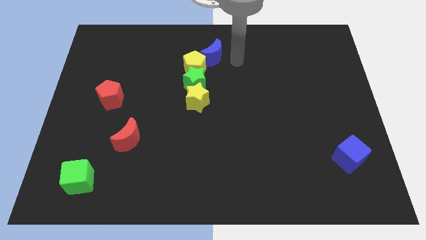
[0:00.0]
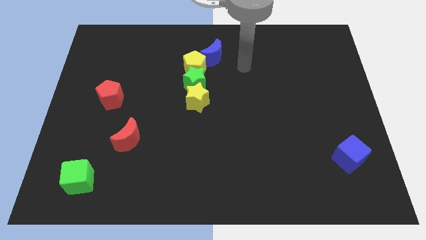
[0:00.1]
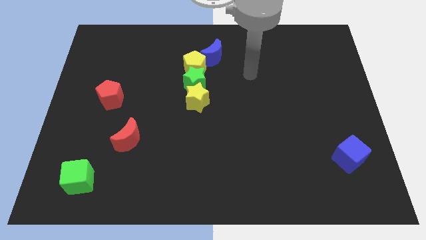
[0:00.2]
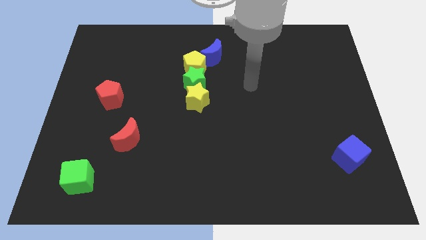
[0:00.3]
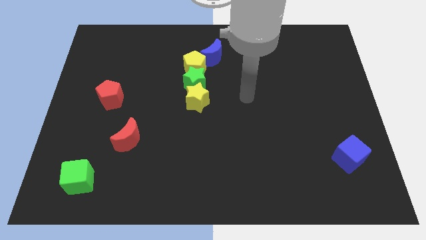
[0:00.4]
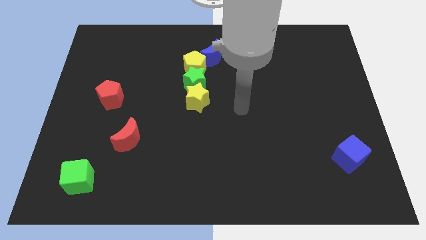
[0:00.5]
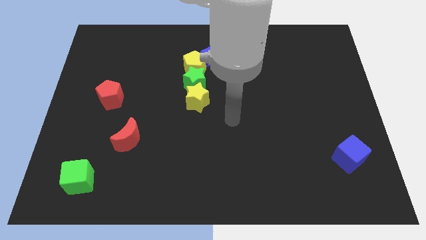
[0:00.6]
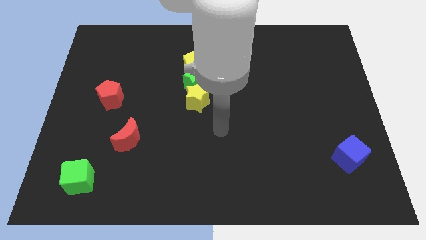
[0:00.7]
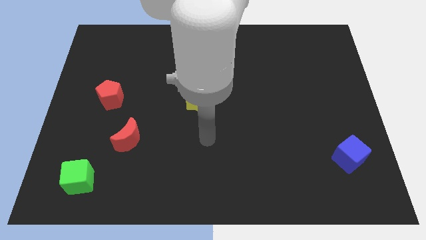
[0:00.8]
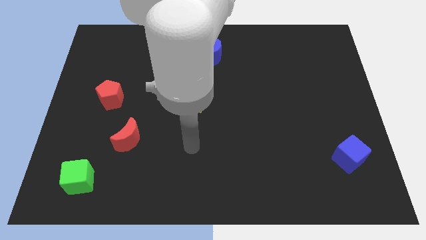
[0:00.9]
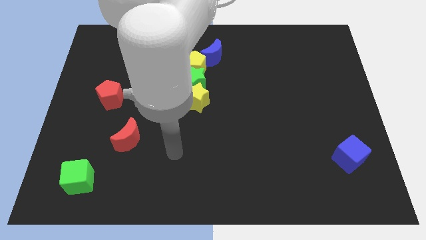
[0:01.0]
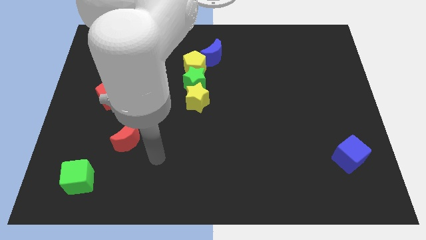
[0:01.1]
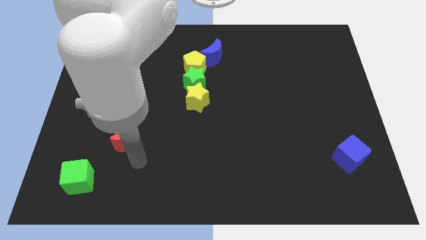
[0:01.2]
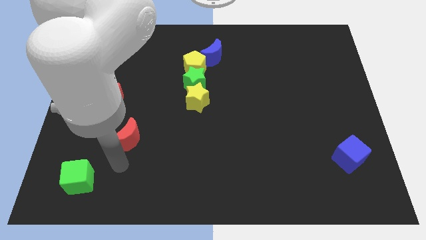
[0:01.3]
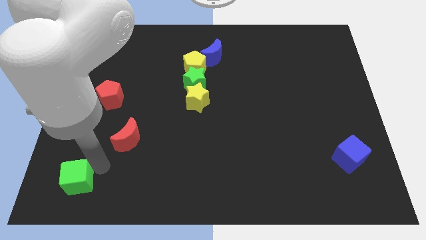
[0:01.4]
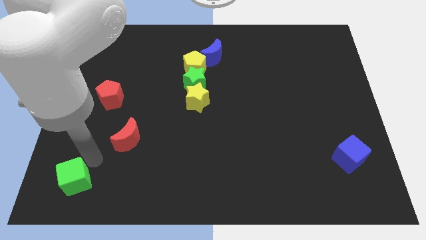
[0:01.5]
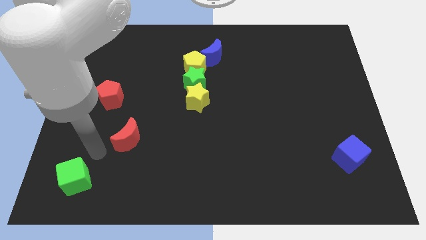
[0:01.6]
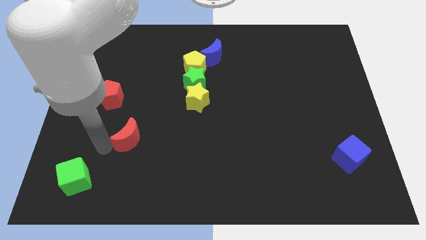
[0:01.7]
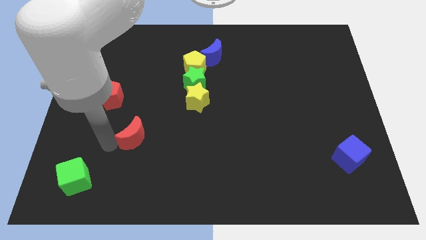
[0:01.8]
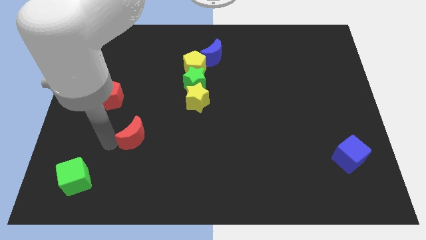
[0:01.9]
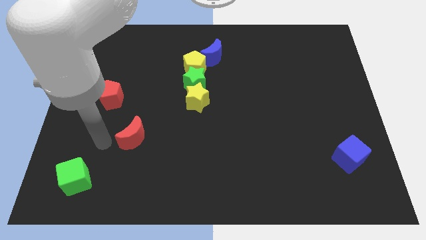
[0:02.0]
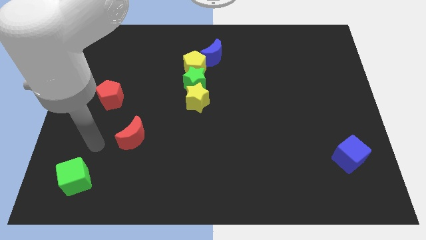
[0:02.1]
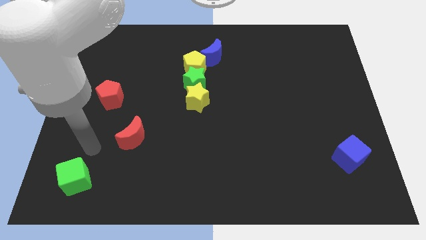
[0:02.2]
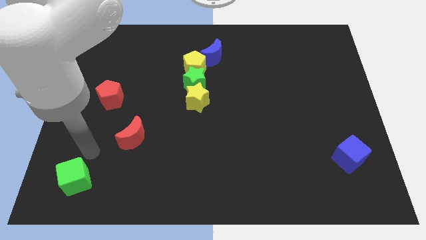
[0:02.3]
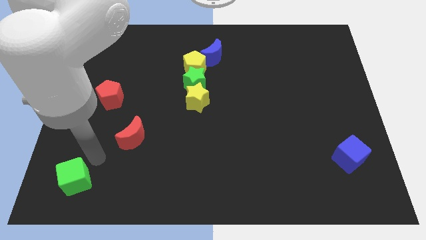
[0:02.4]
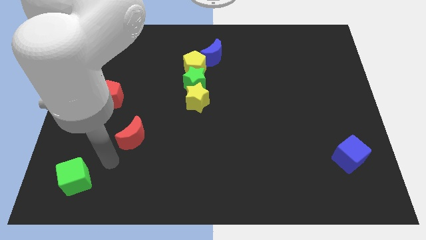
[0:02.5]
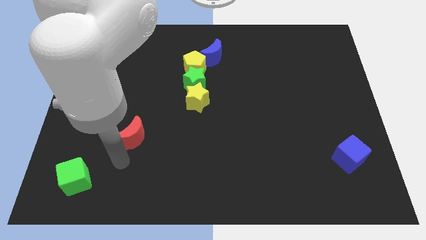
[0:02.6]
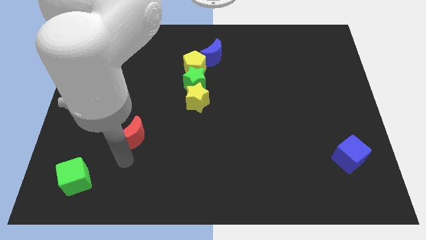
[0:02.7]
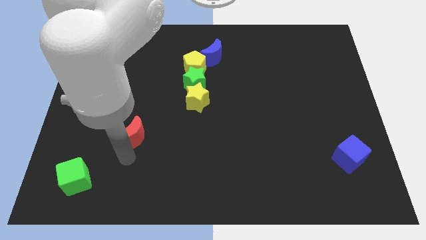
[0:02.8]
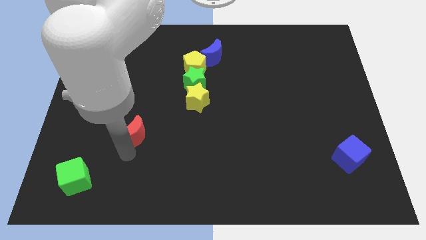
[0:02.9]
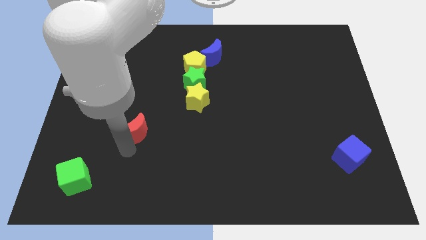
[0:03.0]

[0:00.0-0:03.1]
touch the bottom of red moon

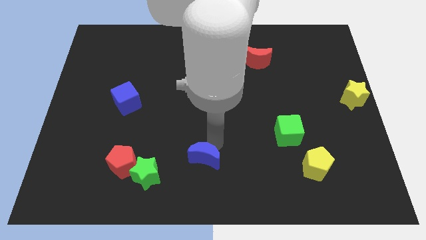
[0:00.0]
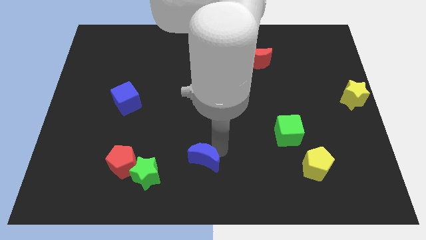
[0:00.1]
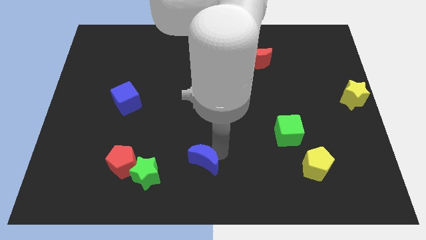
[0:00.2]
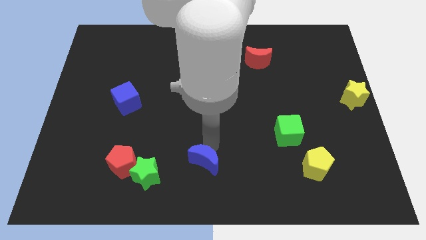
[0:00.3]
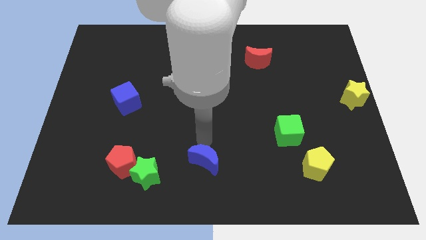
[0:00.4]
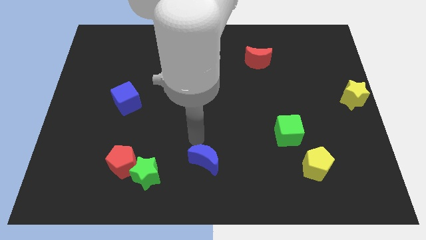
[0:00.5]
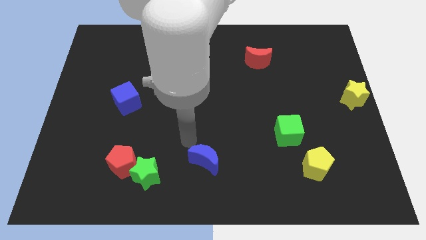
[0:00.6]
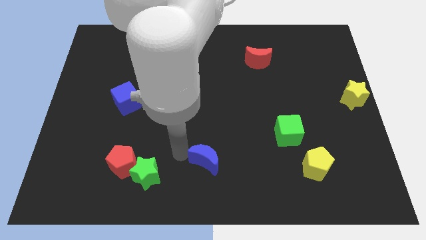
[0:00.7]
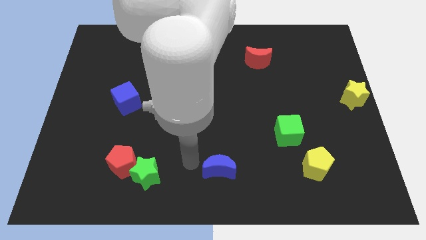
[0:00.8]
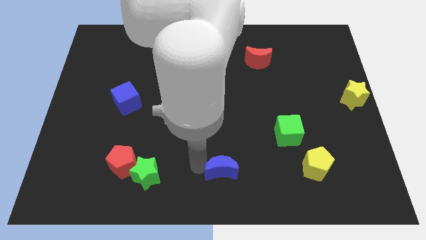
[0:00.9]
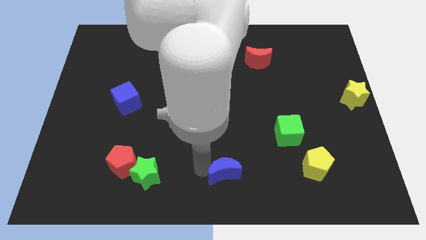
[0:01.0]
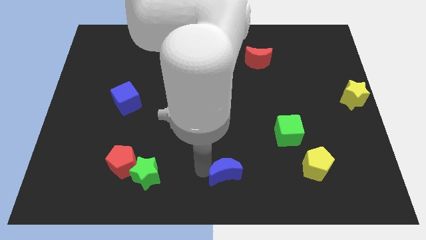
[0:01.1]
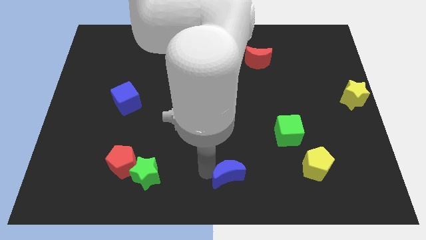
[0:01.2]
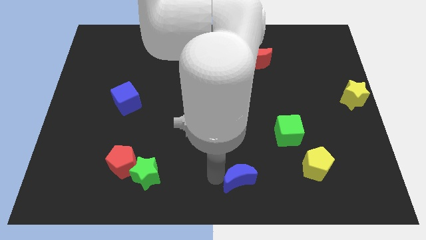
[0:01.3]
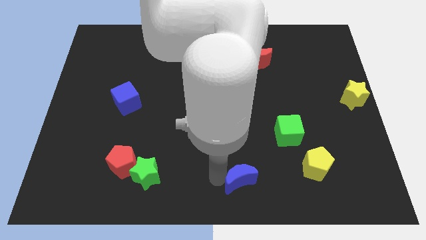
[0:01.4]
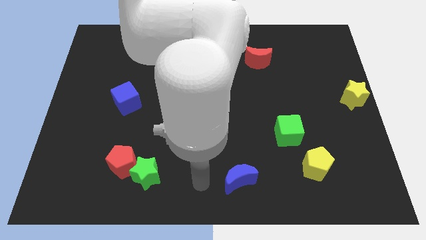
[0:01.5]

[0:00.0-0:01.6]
place the blue crescent at the bottom center of the board

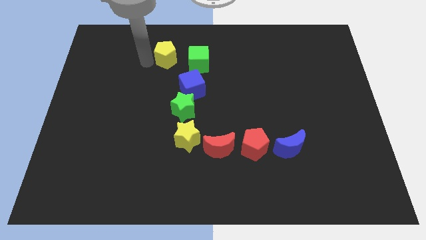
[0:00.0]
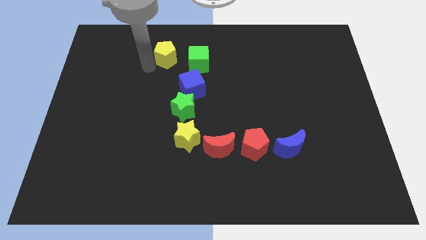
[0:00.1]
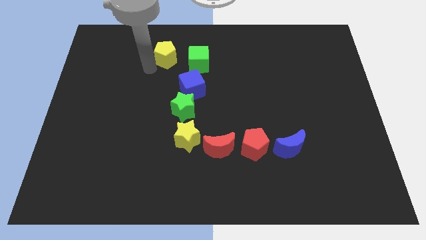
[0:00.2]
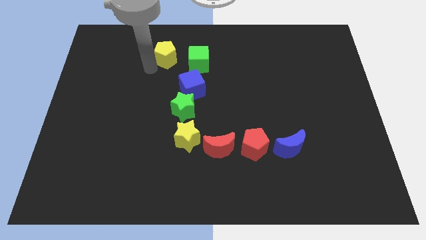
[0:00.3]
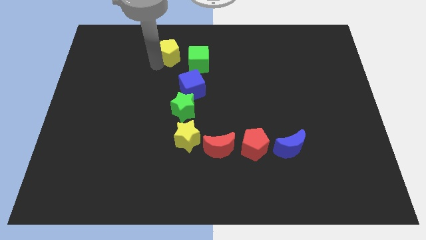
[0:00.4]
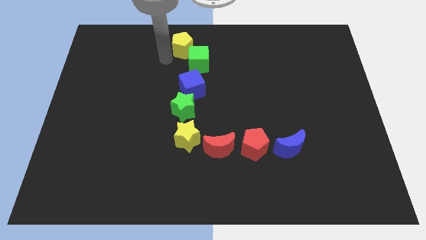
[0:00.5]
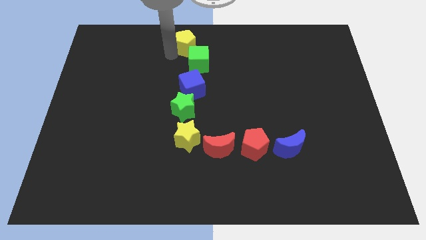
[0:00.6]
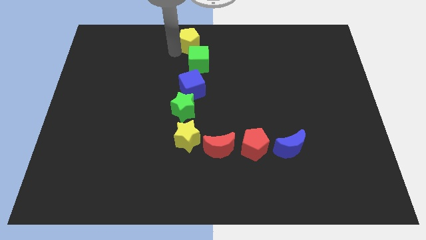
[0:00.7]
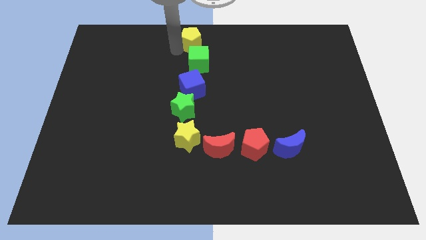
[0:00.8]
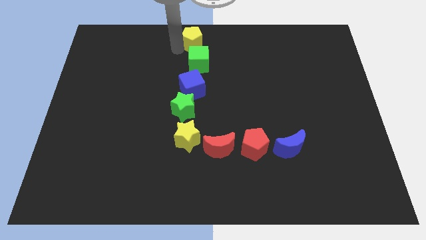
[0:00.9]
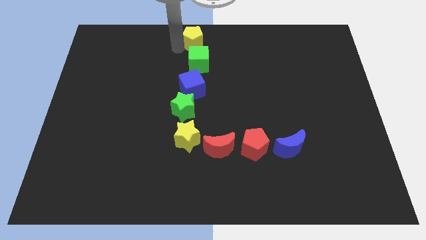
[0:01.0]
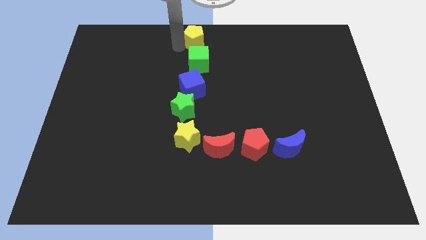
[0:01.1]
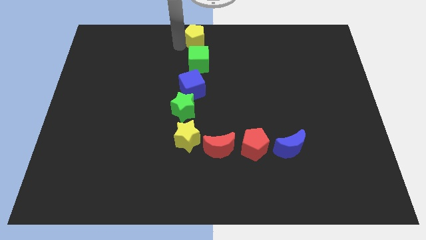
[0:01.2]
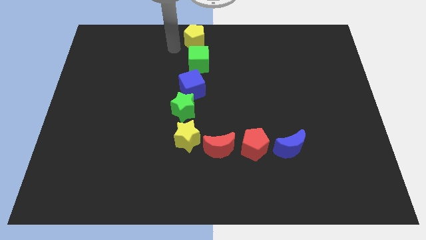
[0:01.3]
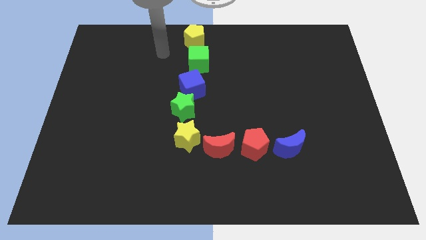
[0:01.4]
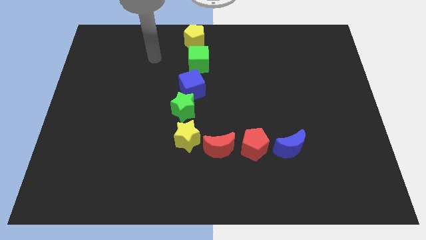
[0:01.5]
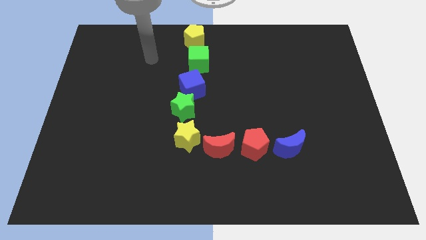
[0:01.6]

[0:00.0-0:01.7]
place the yellow pentagon above the green cube

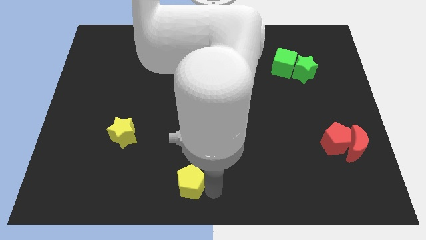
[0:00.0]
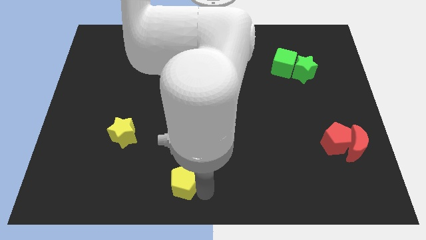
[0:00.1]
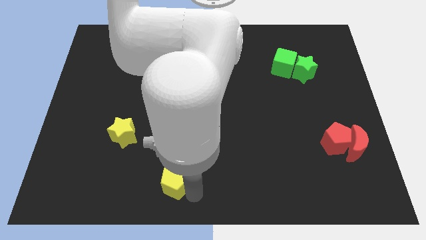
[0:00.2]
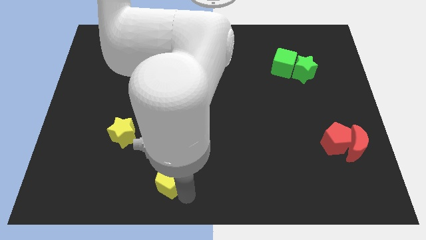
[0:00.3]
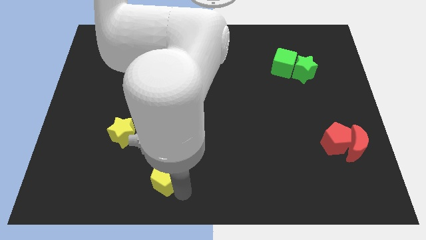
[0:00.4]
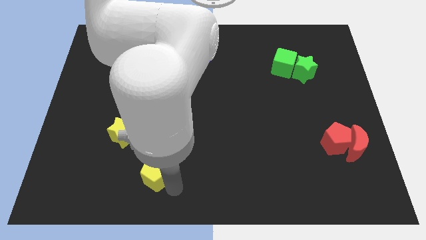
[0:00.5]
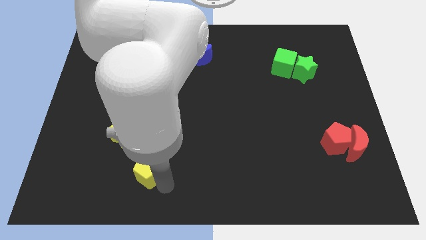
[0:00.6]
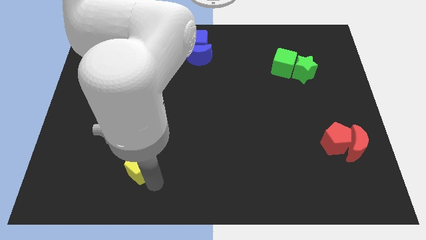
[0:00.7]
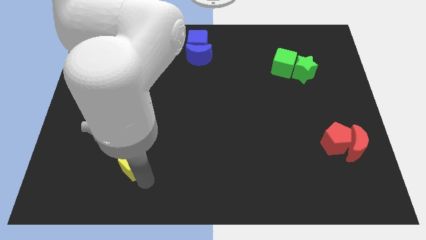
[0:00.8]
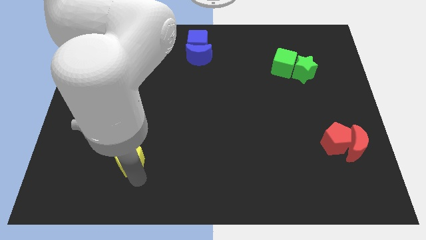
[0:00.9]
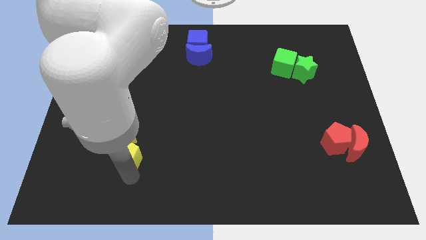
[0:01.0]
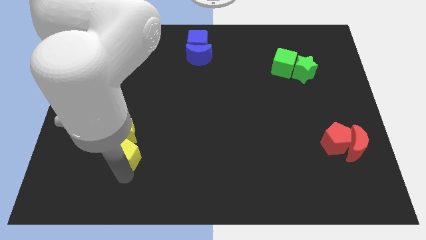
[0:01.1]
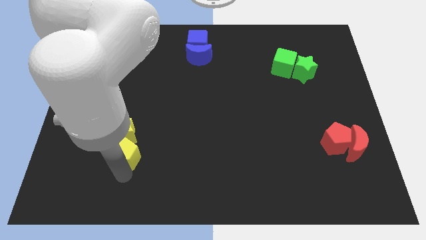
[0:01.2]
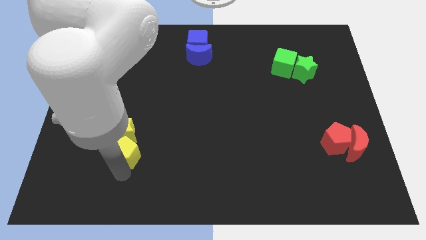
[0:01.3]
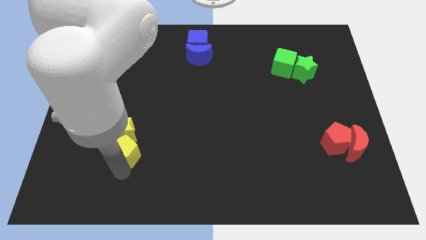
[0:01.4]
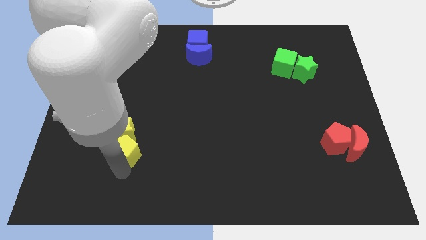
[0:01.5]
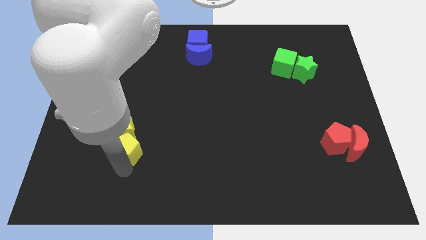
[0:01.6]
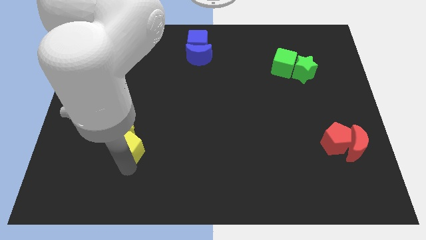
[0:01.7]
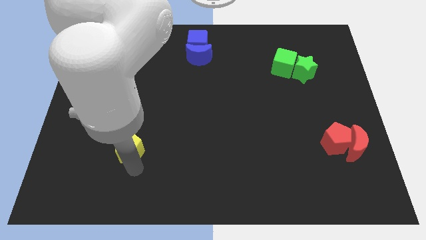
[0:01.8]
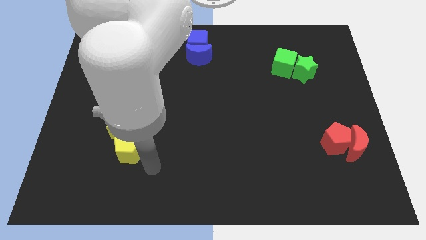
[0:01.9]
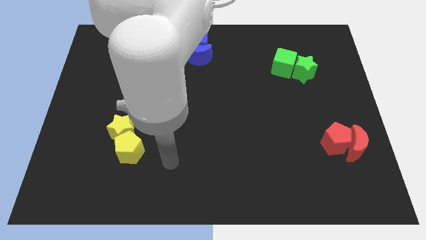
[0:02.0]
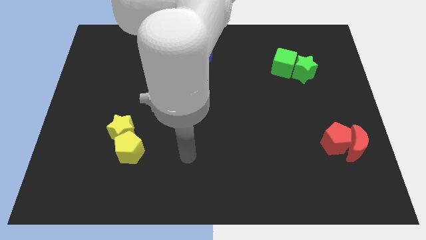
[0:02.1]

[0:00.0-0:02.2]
place the yellow pentagon into the yellow star

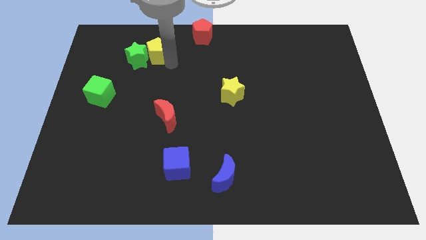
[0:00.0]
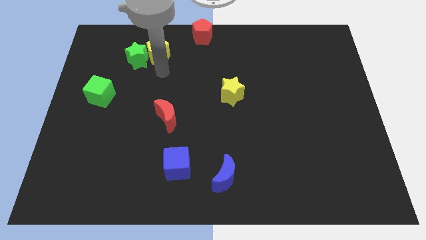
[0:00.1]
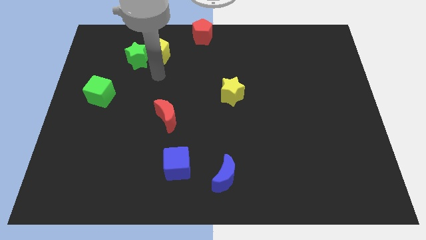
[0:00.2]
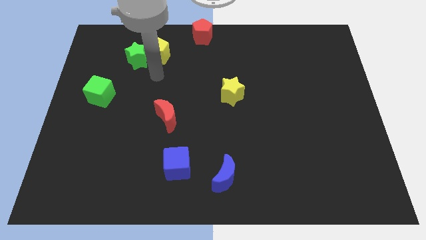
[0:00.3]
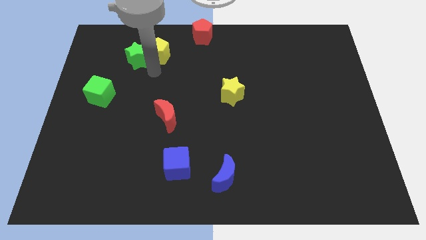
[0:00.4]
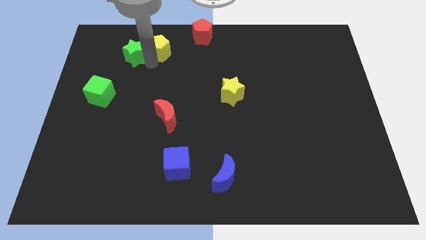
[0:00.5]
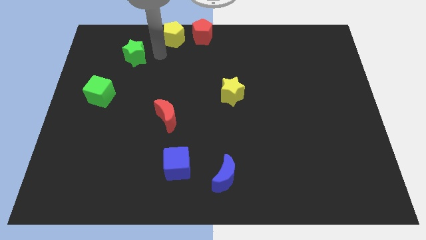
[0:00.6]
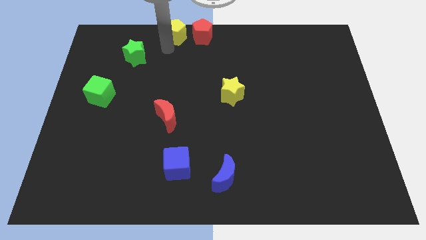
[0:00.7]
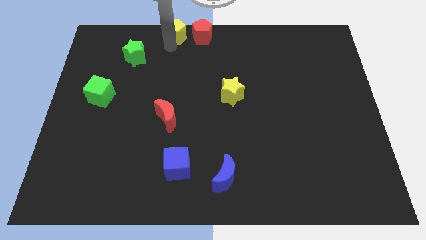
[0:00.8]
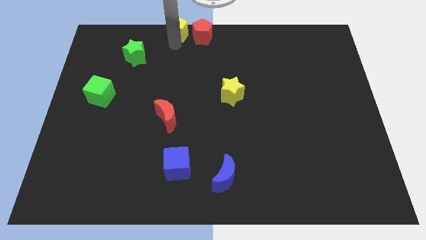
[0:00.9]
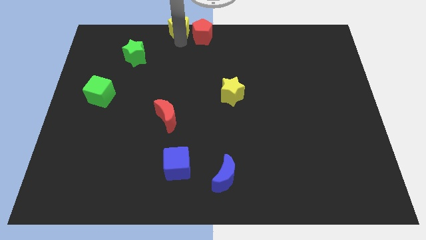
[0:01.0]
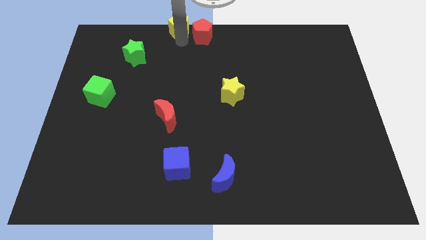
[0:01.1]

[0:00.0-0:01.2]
move the yellow pentagon to the left of the red pentagon
